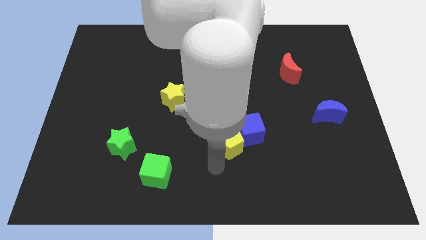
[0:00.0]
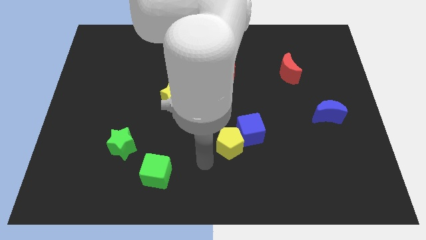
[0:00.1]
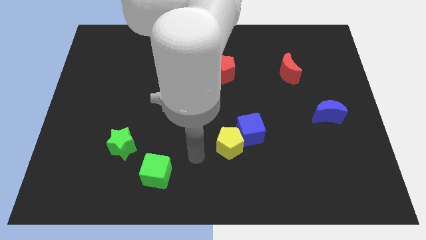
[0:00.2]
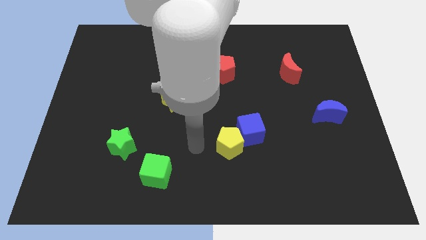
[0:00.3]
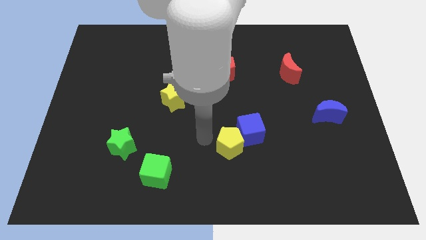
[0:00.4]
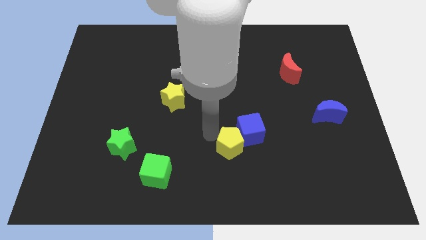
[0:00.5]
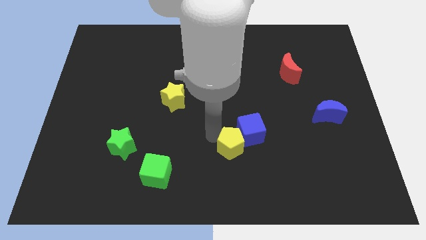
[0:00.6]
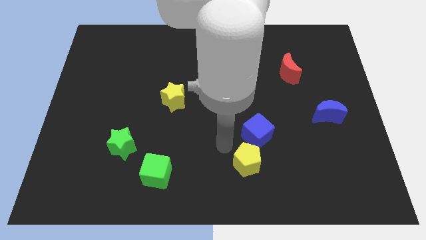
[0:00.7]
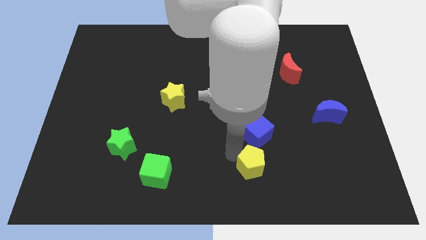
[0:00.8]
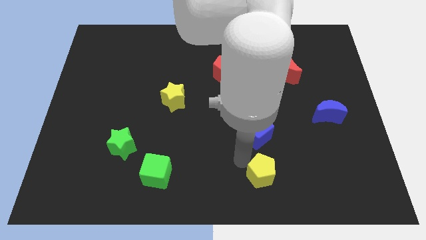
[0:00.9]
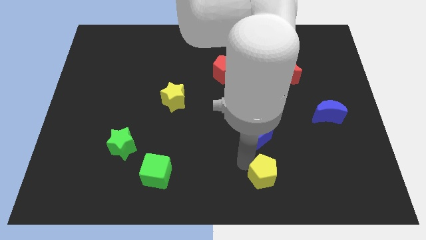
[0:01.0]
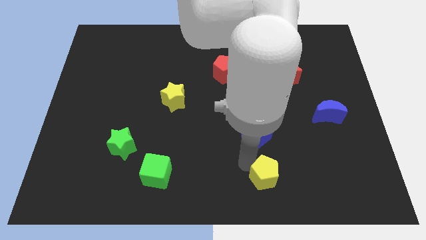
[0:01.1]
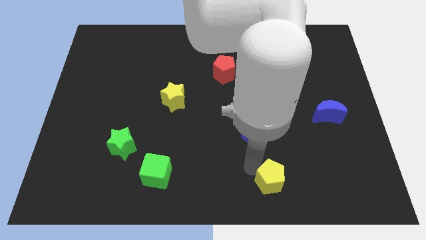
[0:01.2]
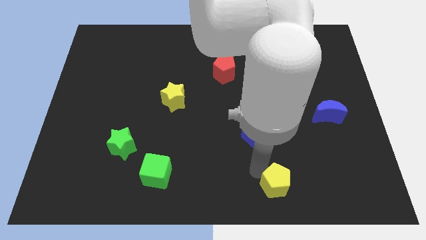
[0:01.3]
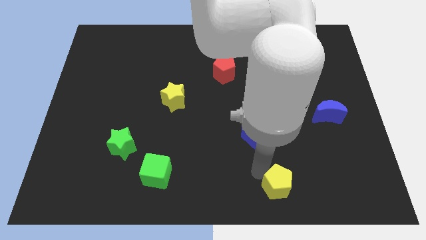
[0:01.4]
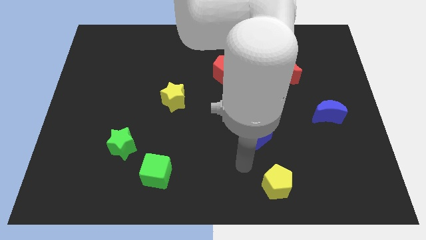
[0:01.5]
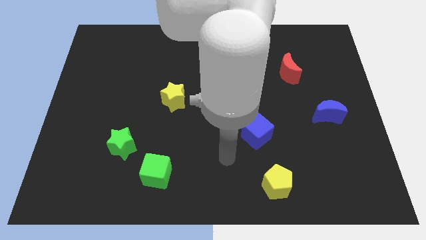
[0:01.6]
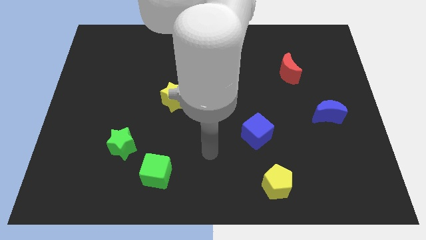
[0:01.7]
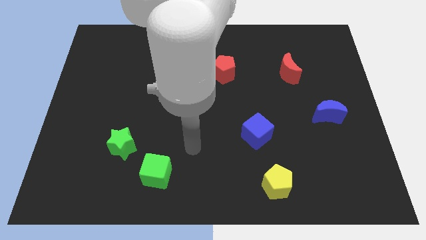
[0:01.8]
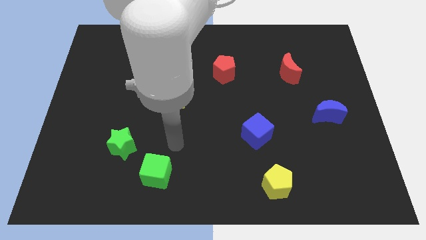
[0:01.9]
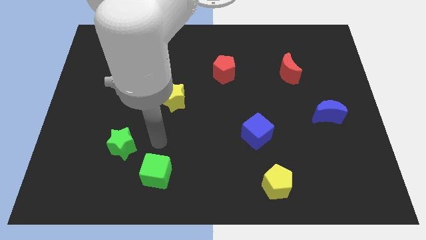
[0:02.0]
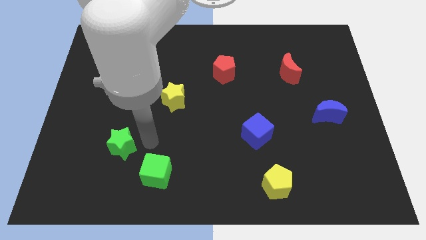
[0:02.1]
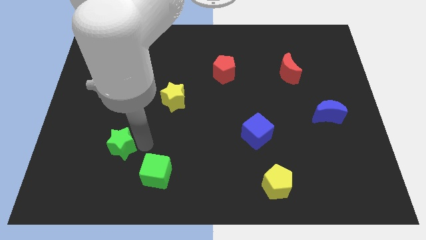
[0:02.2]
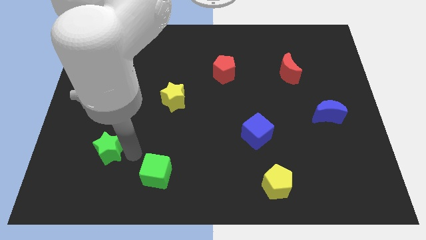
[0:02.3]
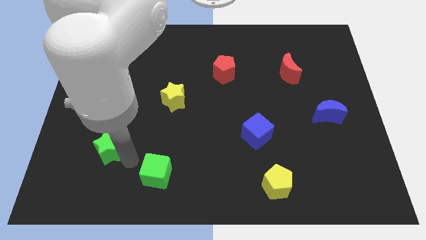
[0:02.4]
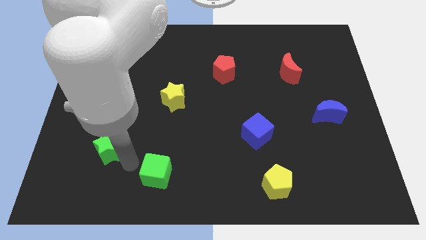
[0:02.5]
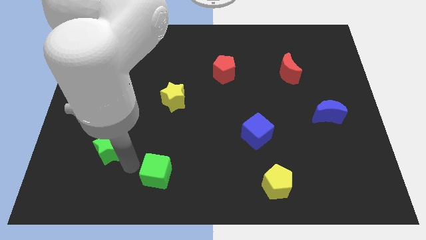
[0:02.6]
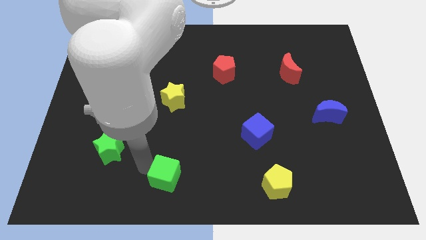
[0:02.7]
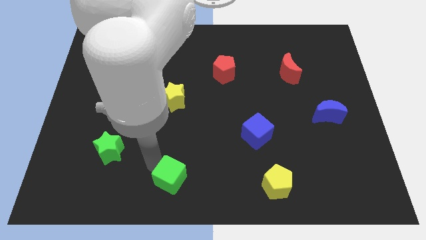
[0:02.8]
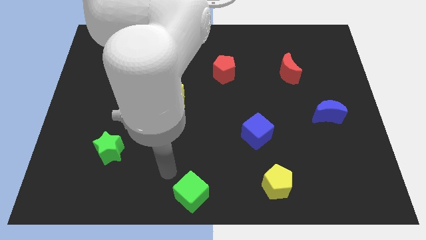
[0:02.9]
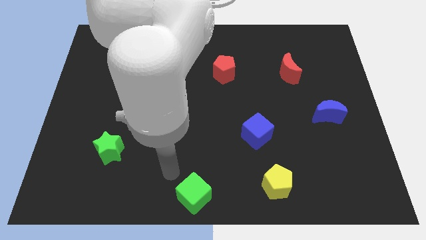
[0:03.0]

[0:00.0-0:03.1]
separate the yellow pentagon and blue cube

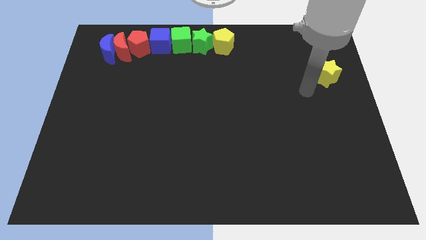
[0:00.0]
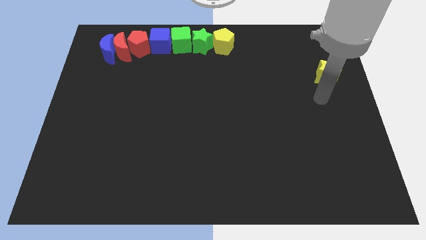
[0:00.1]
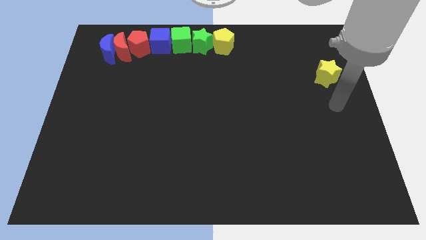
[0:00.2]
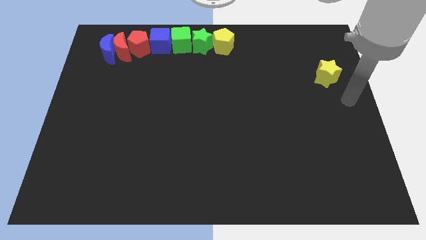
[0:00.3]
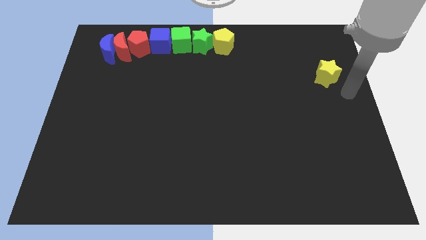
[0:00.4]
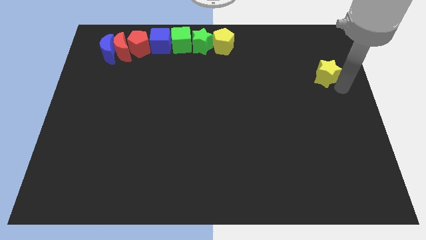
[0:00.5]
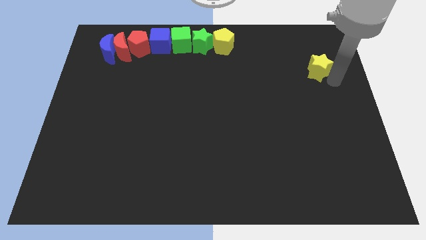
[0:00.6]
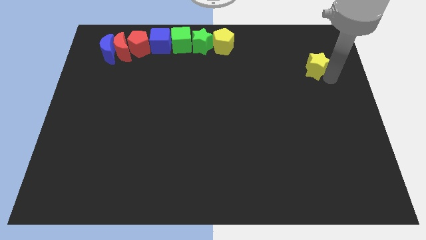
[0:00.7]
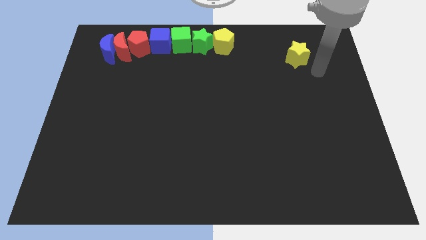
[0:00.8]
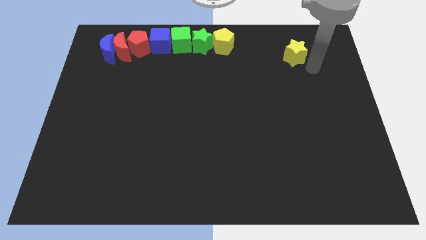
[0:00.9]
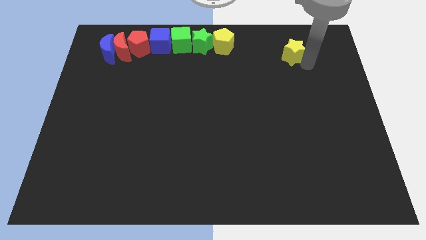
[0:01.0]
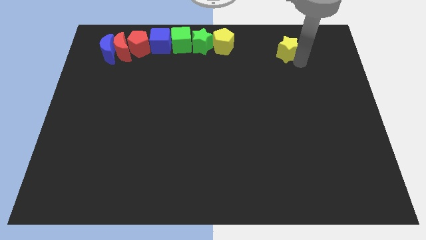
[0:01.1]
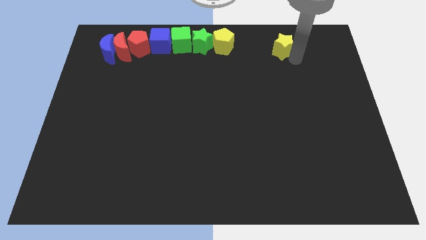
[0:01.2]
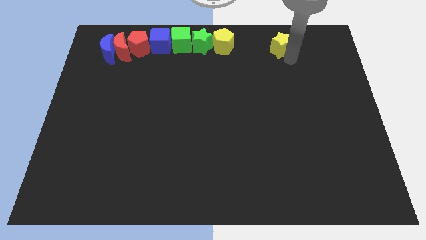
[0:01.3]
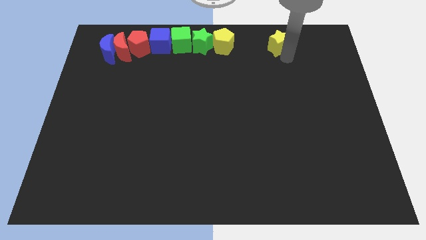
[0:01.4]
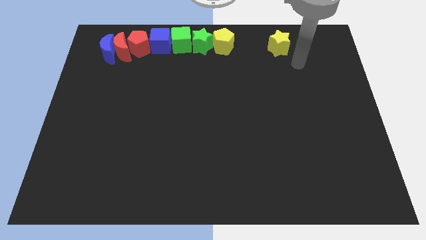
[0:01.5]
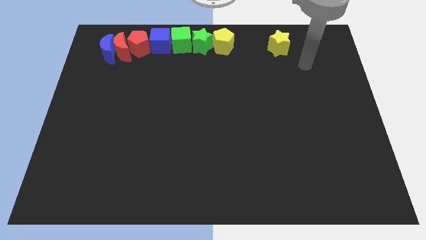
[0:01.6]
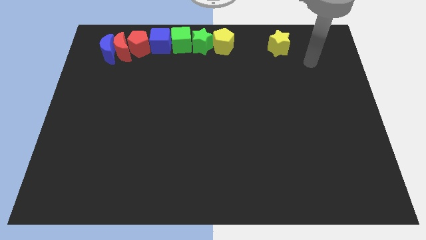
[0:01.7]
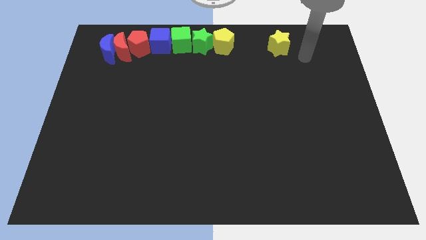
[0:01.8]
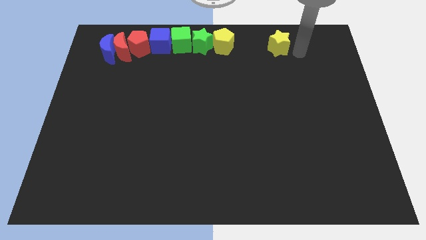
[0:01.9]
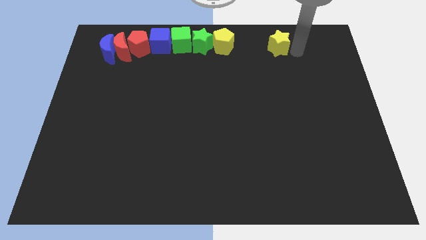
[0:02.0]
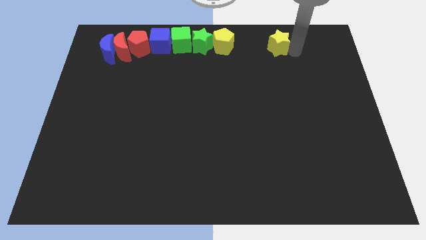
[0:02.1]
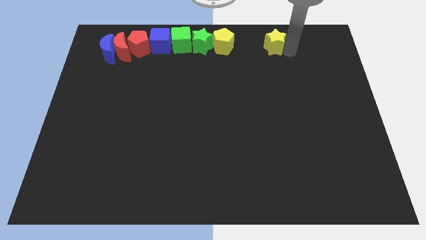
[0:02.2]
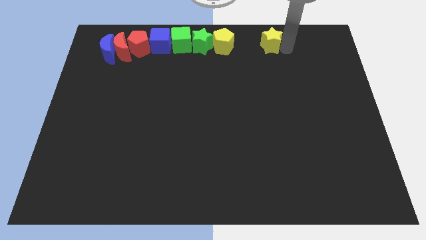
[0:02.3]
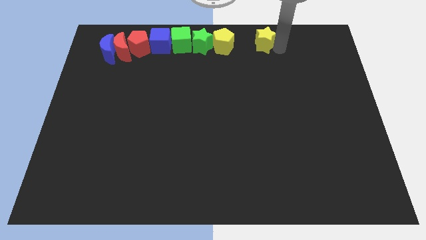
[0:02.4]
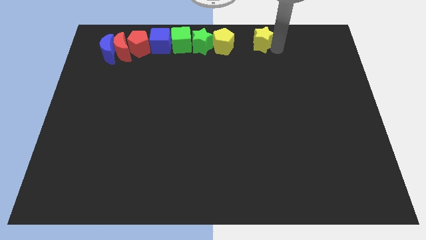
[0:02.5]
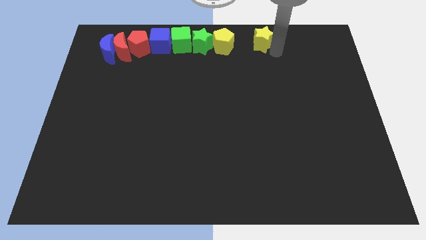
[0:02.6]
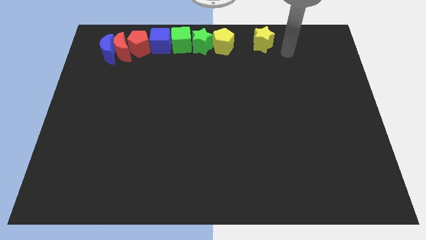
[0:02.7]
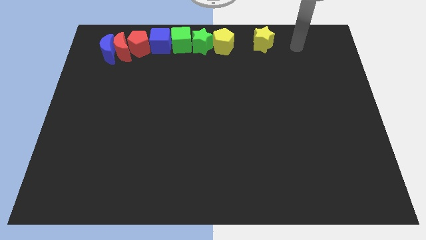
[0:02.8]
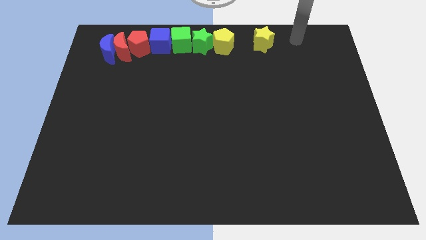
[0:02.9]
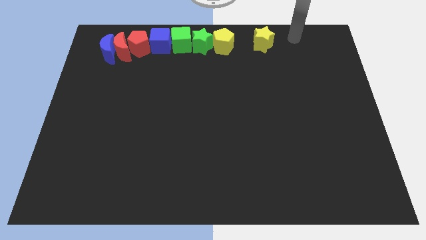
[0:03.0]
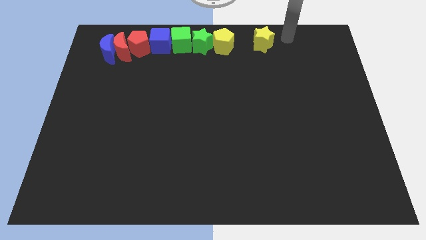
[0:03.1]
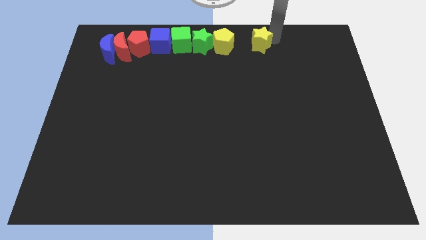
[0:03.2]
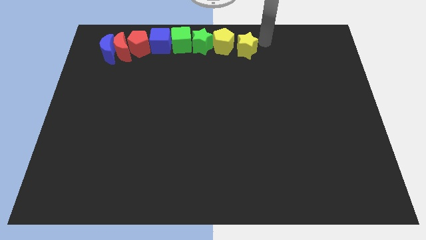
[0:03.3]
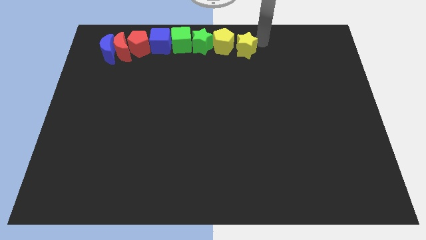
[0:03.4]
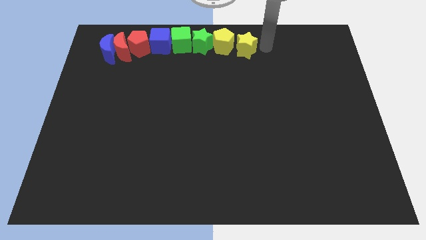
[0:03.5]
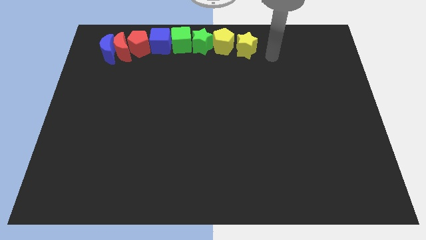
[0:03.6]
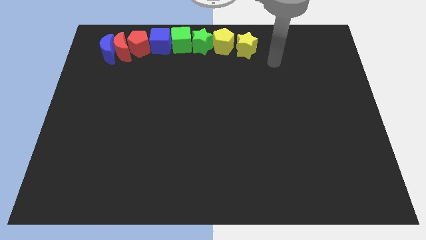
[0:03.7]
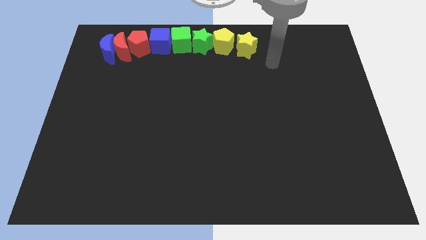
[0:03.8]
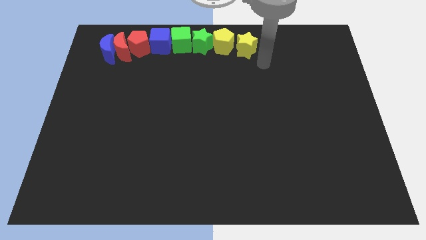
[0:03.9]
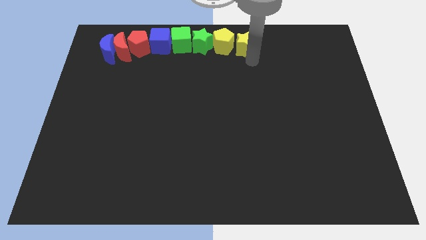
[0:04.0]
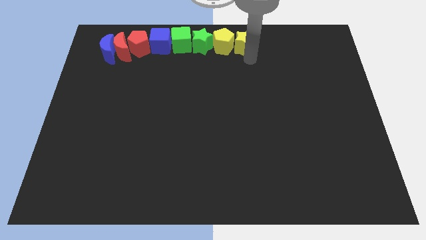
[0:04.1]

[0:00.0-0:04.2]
move yellow star close to yellow pentagon

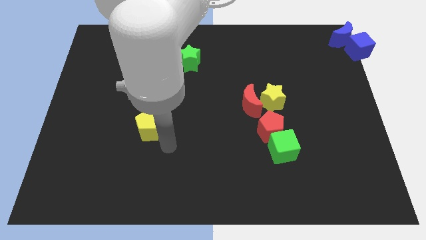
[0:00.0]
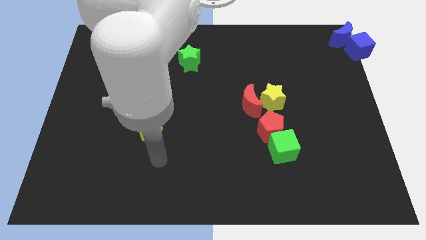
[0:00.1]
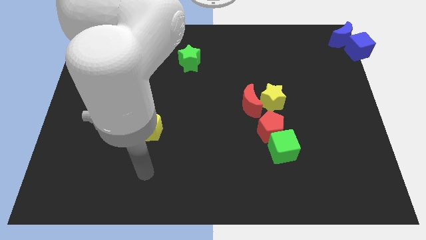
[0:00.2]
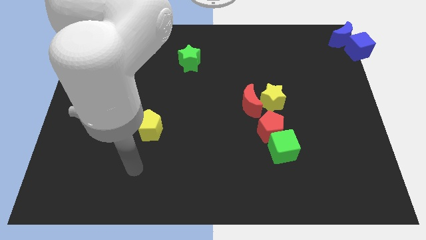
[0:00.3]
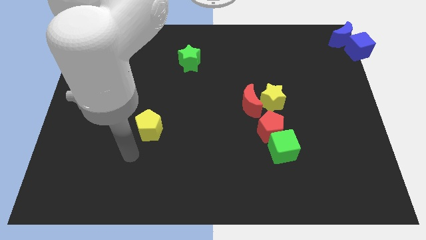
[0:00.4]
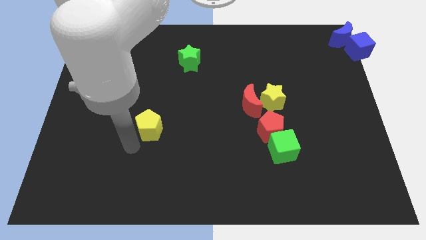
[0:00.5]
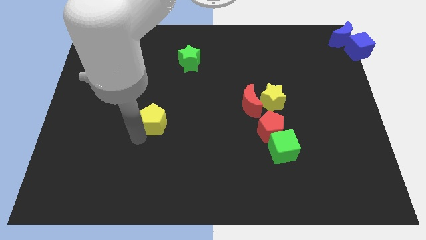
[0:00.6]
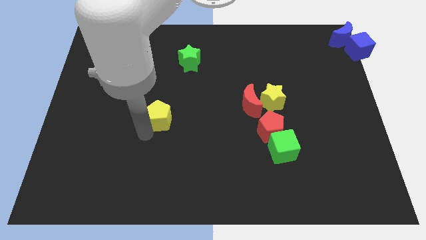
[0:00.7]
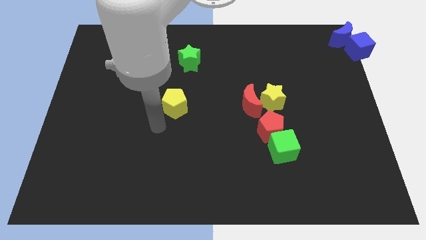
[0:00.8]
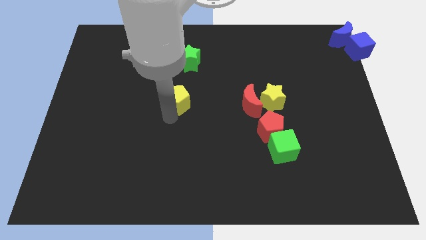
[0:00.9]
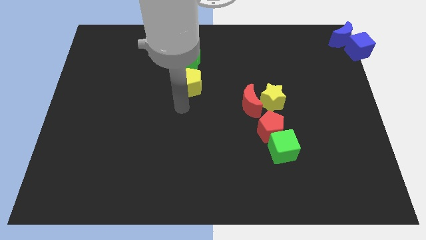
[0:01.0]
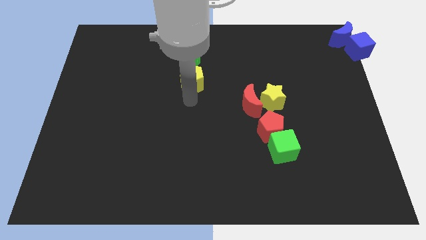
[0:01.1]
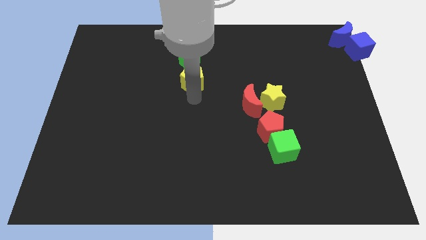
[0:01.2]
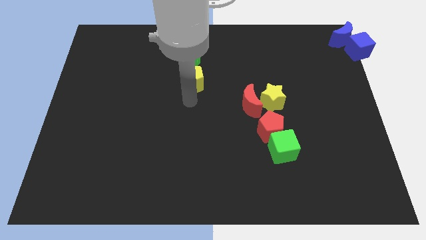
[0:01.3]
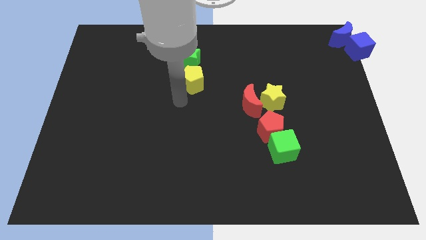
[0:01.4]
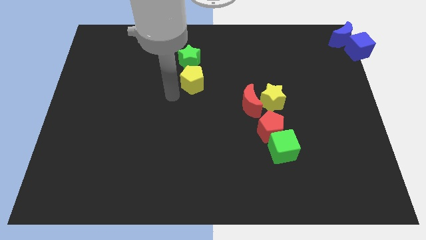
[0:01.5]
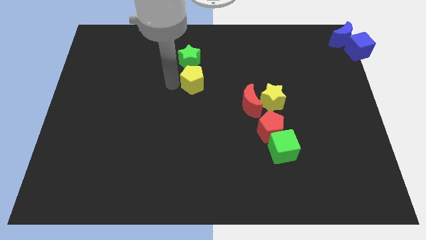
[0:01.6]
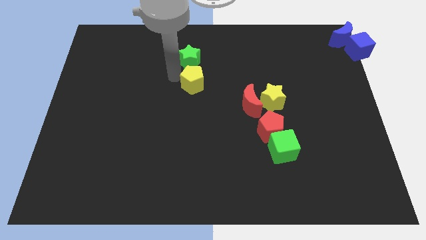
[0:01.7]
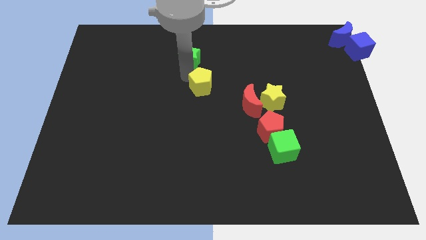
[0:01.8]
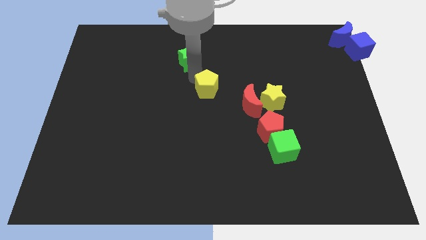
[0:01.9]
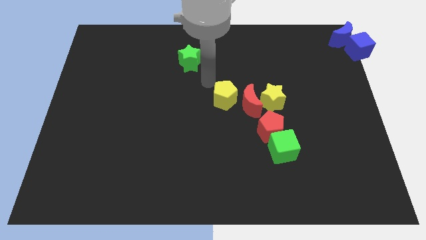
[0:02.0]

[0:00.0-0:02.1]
move yellow pentagon middle of the board
